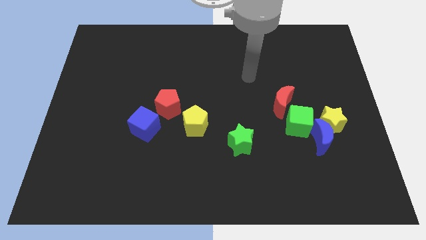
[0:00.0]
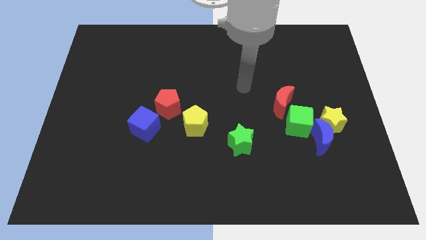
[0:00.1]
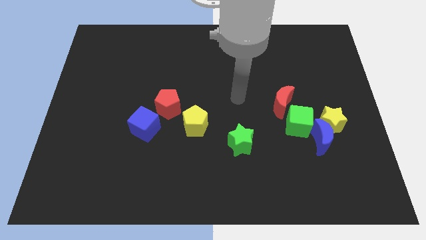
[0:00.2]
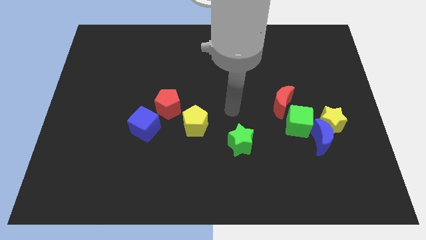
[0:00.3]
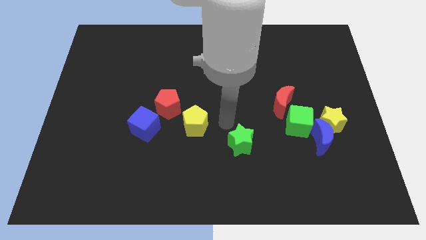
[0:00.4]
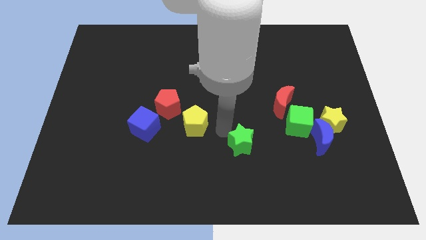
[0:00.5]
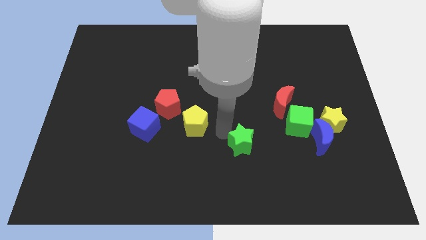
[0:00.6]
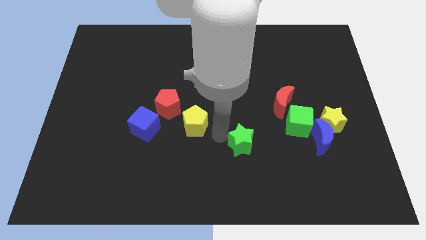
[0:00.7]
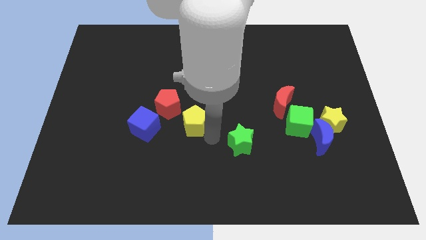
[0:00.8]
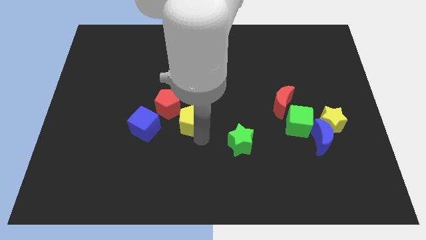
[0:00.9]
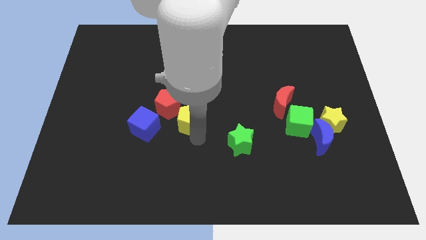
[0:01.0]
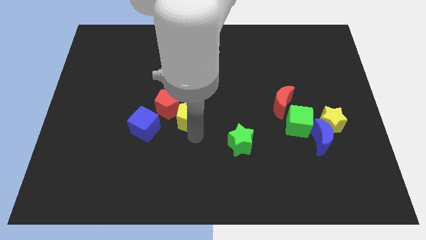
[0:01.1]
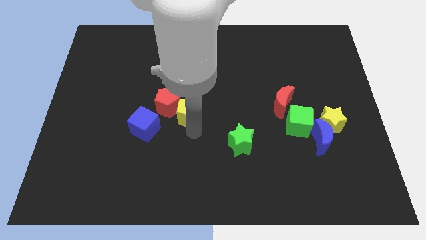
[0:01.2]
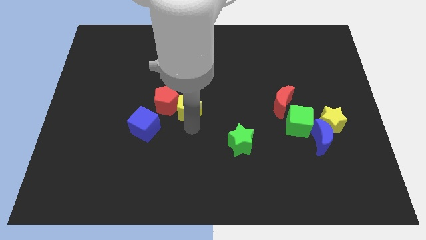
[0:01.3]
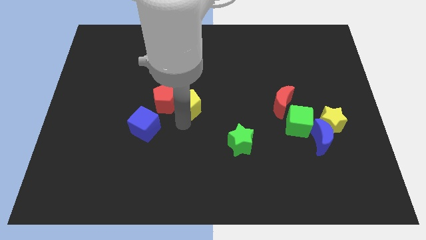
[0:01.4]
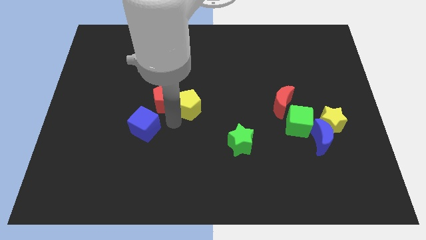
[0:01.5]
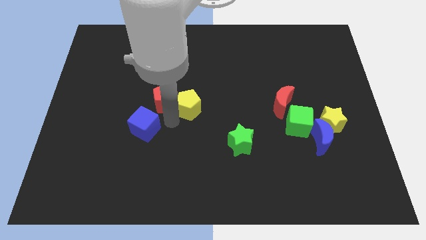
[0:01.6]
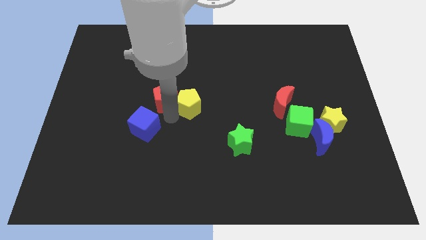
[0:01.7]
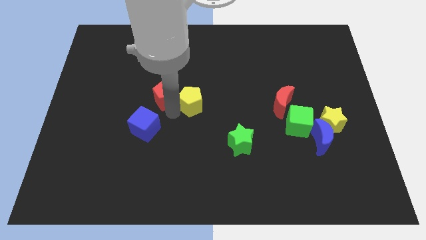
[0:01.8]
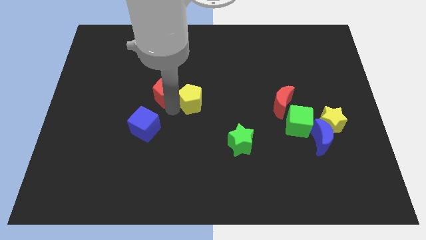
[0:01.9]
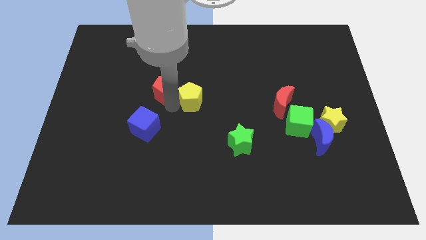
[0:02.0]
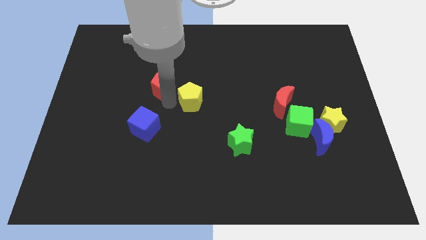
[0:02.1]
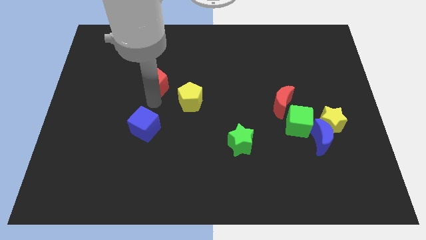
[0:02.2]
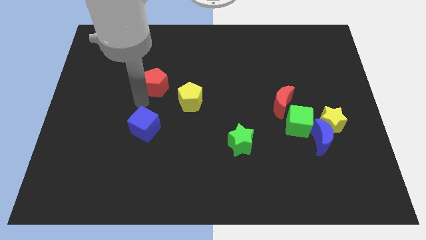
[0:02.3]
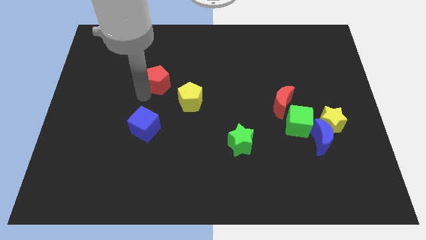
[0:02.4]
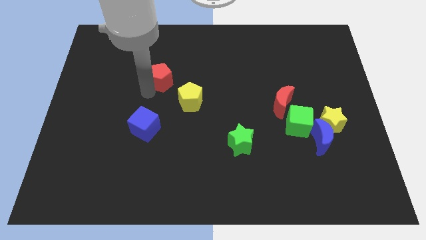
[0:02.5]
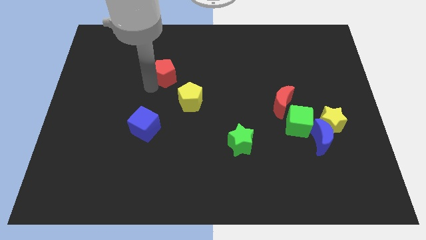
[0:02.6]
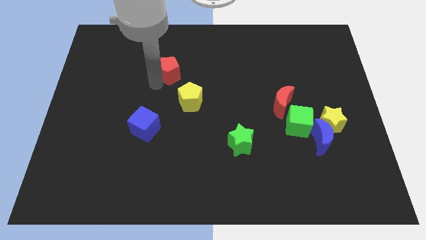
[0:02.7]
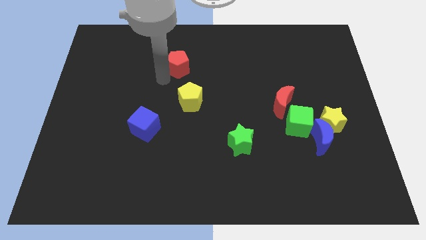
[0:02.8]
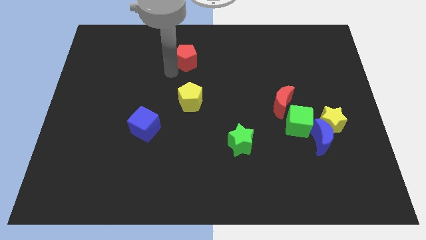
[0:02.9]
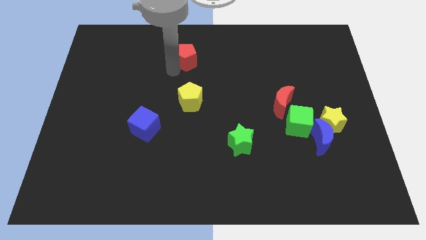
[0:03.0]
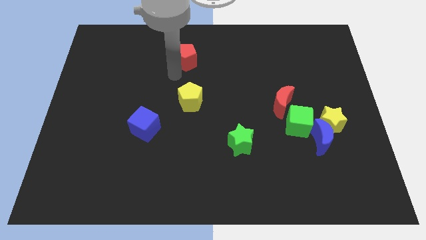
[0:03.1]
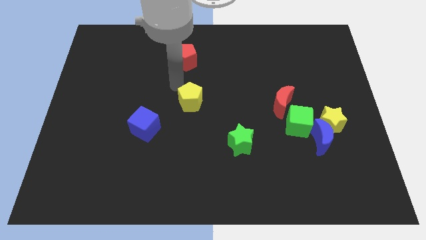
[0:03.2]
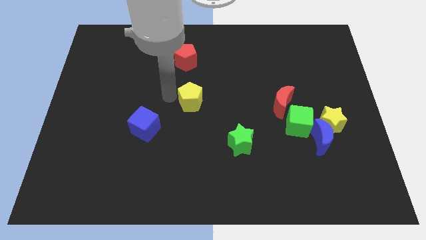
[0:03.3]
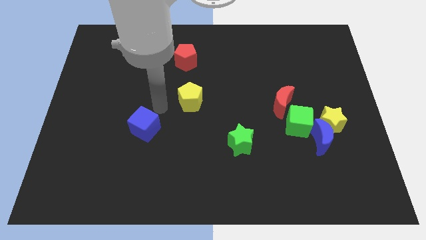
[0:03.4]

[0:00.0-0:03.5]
place the red pentagon above the yellow pentagon

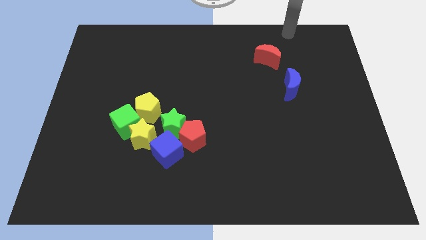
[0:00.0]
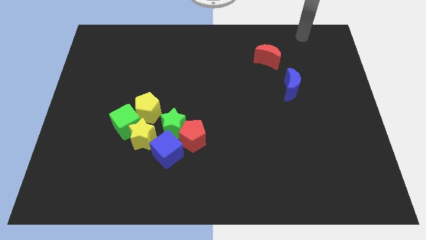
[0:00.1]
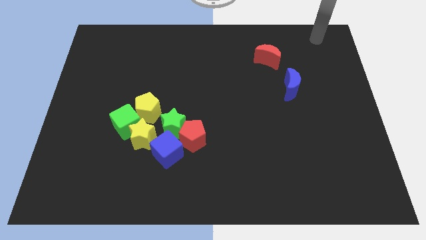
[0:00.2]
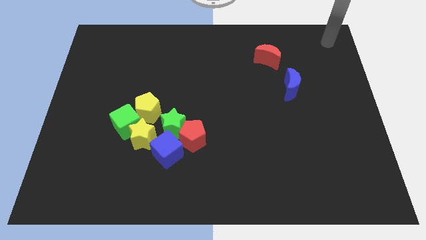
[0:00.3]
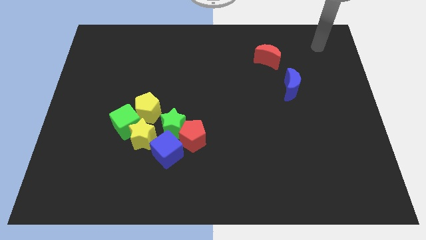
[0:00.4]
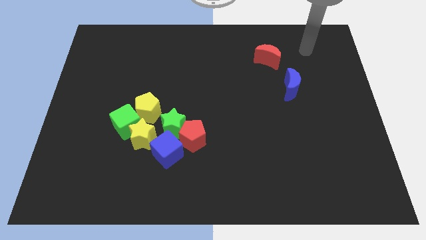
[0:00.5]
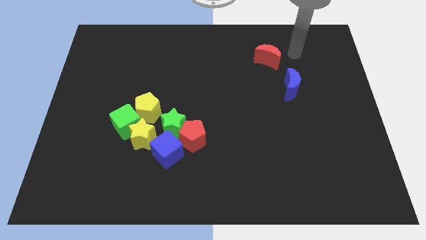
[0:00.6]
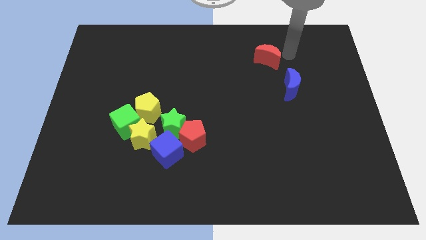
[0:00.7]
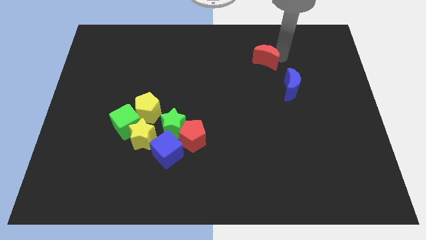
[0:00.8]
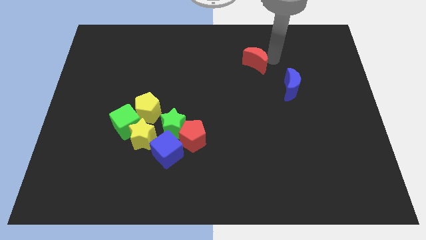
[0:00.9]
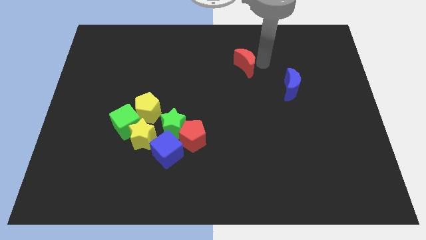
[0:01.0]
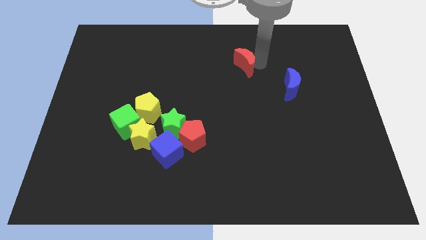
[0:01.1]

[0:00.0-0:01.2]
push the red moon to the top center

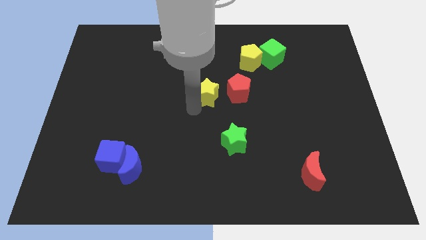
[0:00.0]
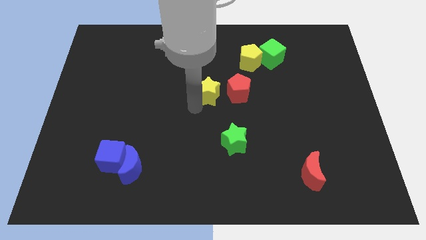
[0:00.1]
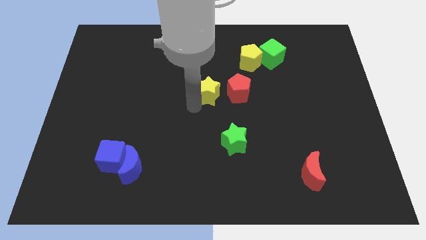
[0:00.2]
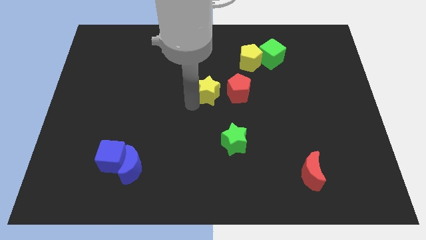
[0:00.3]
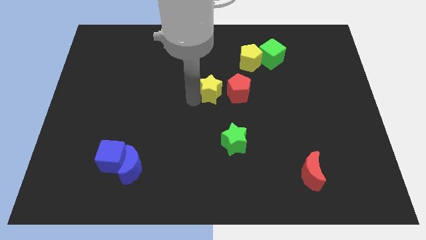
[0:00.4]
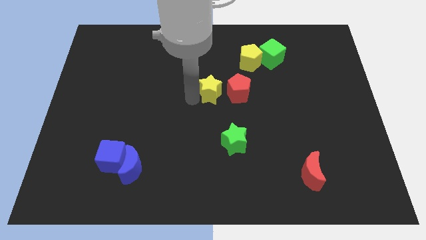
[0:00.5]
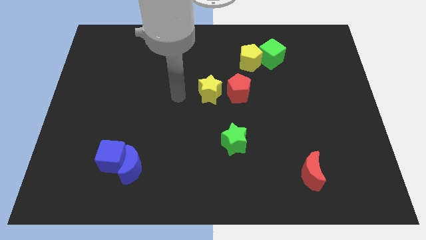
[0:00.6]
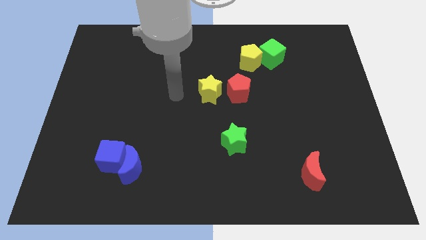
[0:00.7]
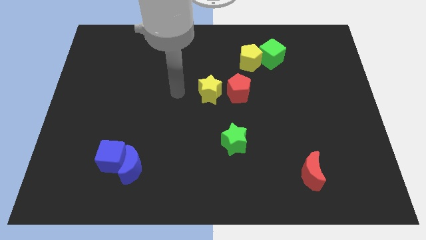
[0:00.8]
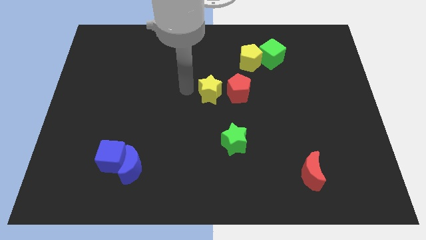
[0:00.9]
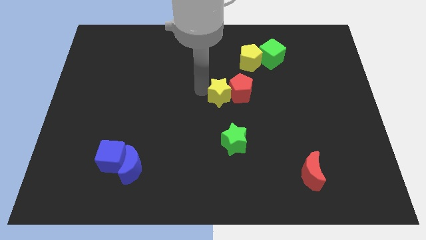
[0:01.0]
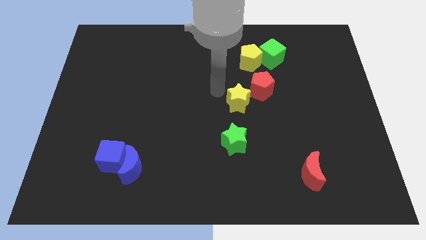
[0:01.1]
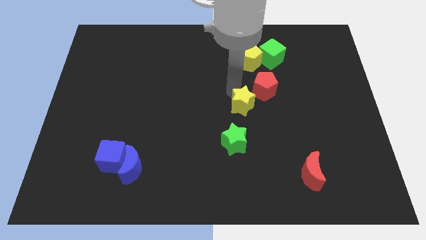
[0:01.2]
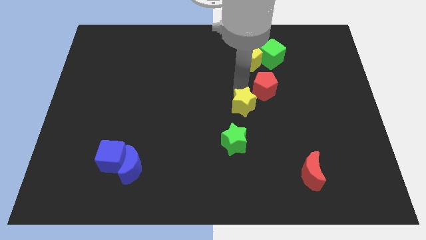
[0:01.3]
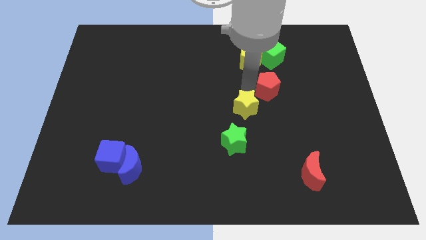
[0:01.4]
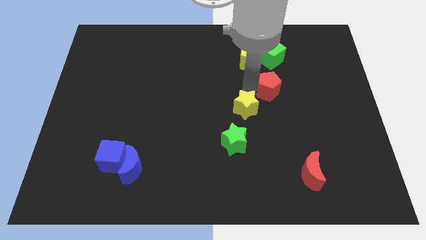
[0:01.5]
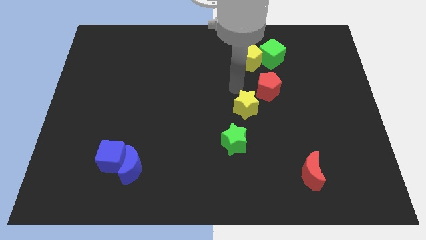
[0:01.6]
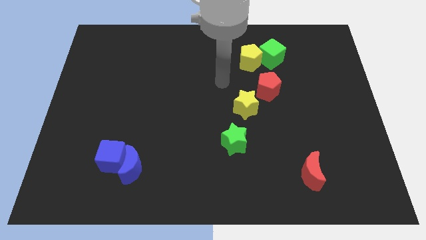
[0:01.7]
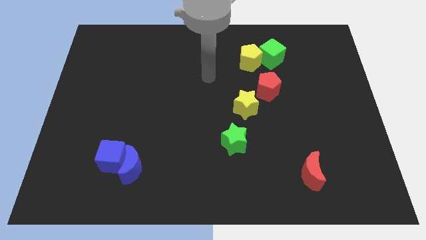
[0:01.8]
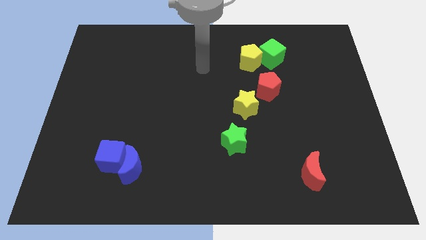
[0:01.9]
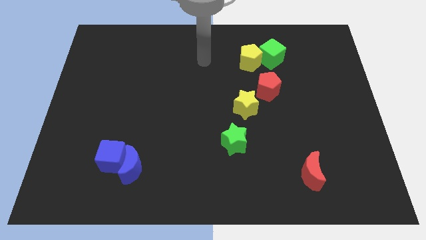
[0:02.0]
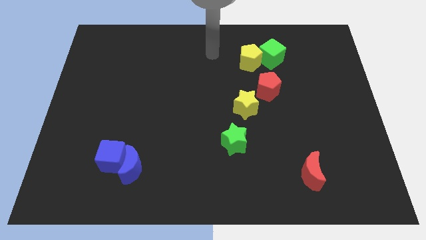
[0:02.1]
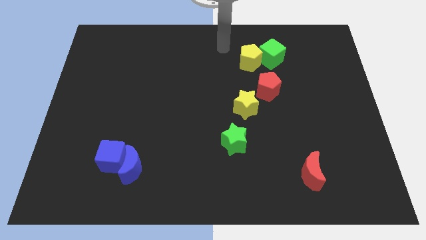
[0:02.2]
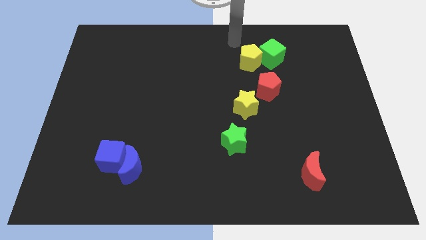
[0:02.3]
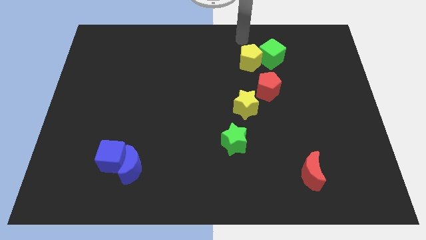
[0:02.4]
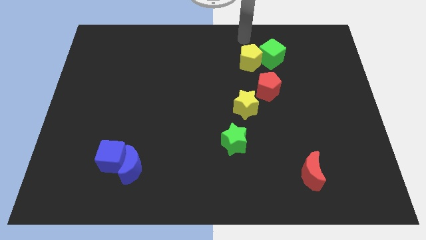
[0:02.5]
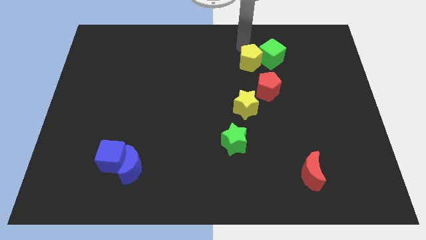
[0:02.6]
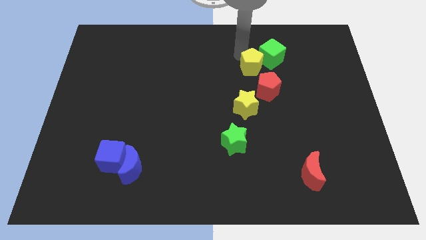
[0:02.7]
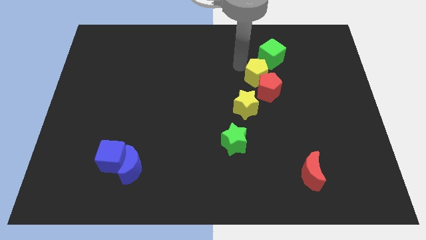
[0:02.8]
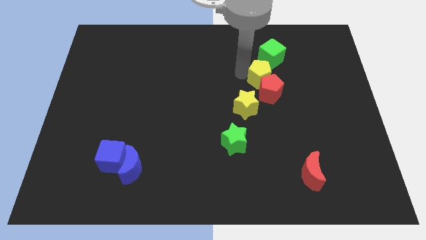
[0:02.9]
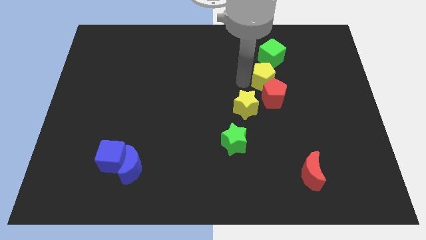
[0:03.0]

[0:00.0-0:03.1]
place yellow pentagon in between green cube abd yellow star

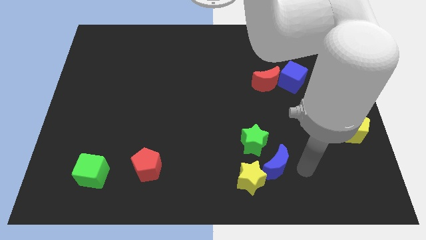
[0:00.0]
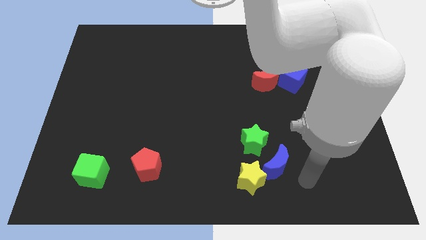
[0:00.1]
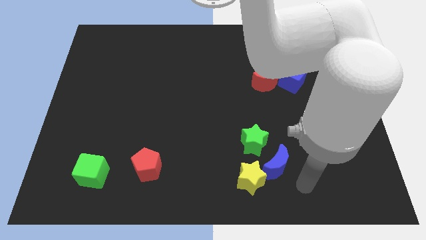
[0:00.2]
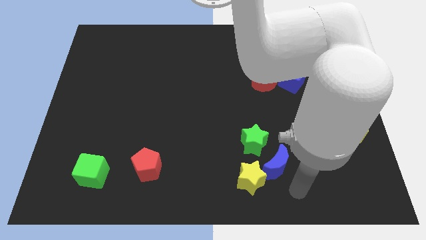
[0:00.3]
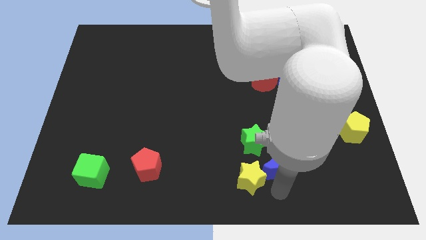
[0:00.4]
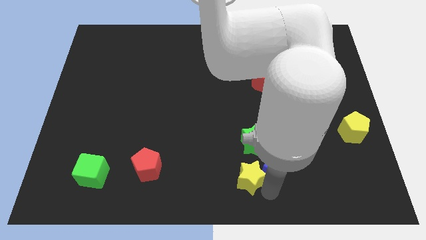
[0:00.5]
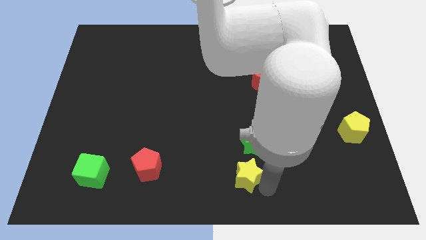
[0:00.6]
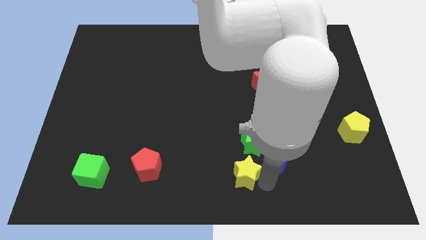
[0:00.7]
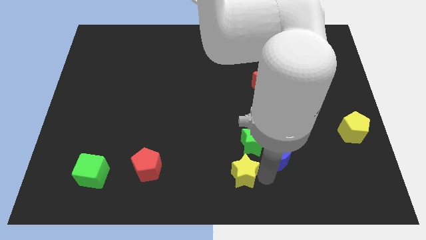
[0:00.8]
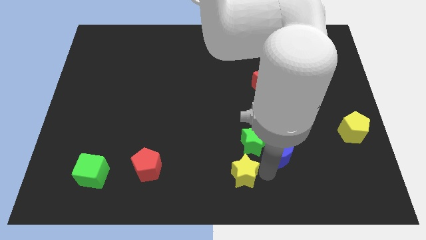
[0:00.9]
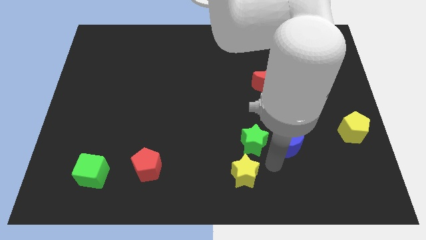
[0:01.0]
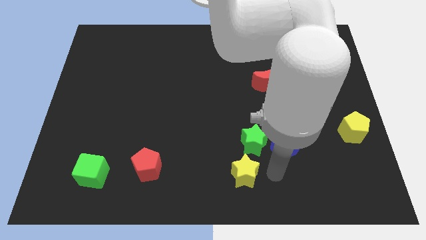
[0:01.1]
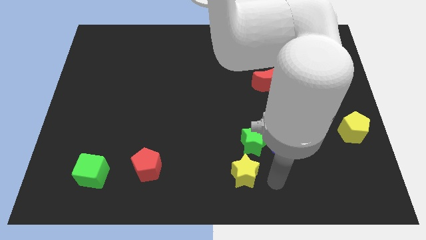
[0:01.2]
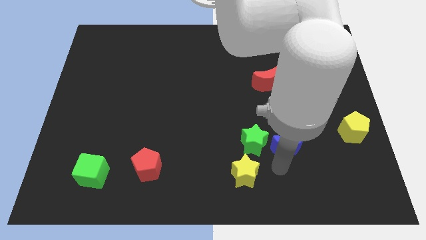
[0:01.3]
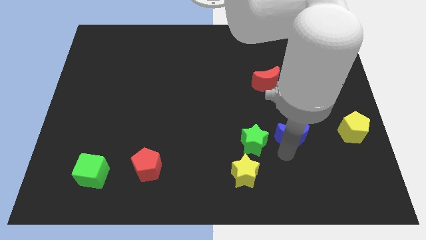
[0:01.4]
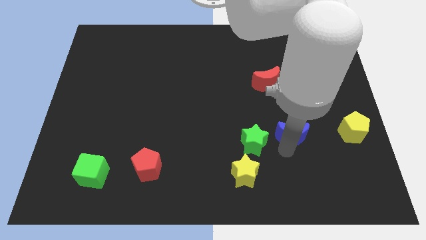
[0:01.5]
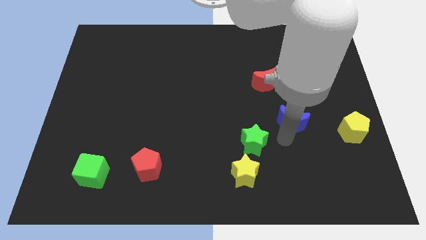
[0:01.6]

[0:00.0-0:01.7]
push the blue crescent towards the blue cube
